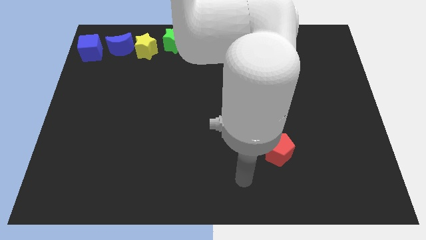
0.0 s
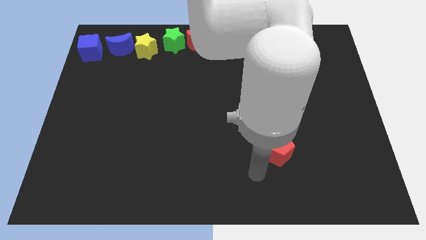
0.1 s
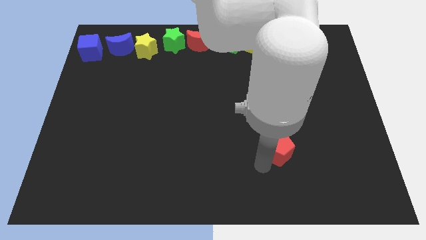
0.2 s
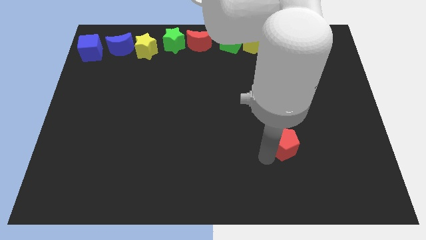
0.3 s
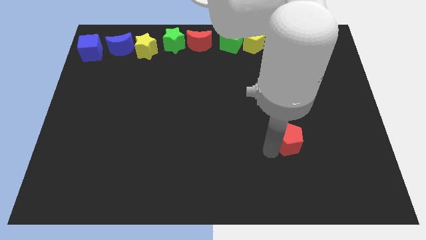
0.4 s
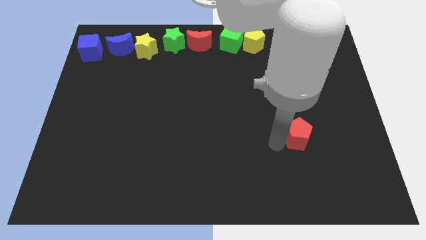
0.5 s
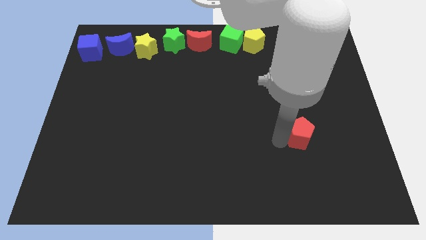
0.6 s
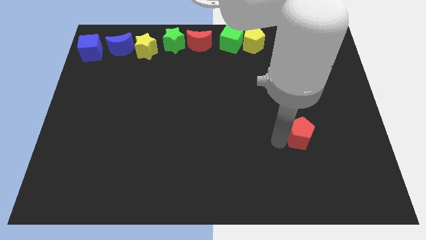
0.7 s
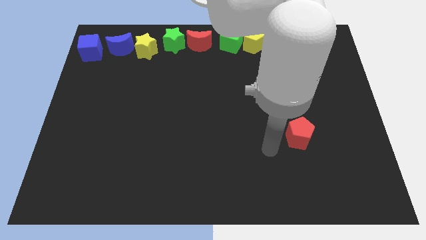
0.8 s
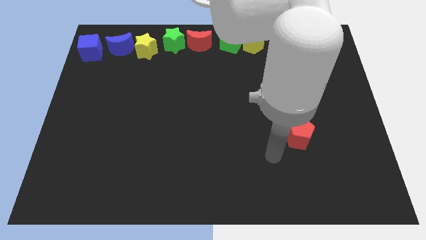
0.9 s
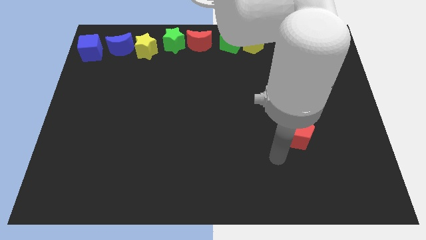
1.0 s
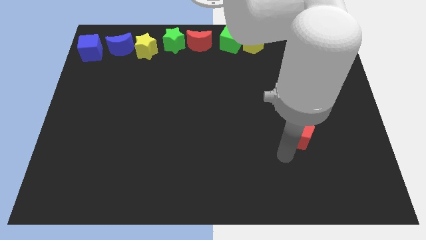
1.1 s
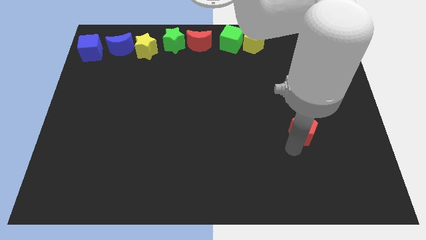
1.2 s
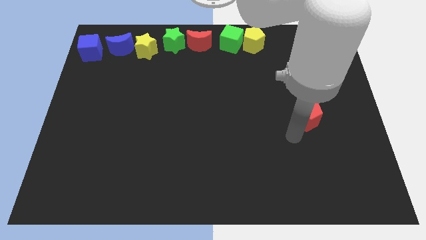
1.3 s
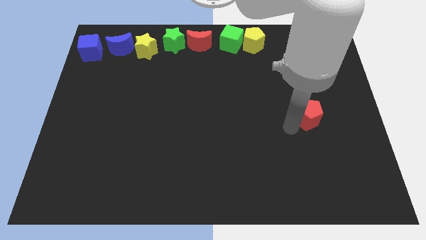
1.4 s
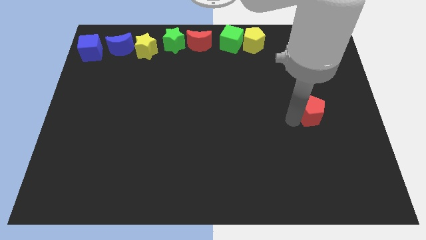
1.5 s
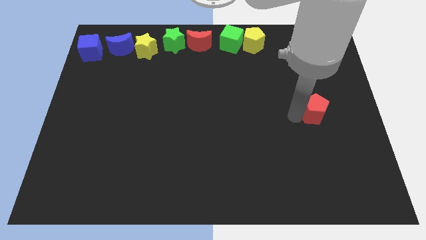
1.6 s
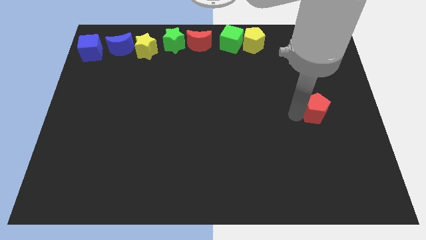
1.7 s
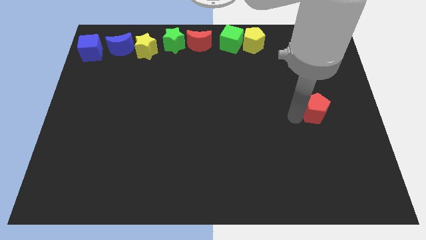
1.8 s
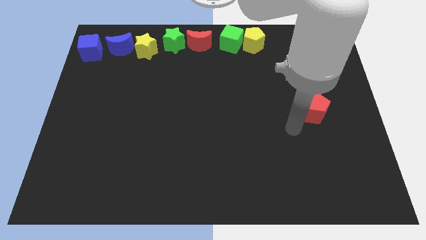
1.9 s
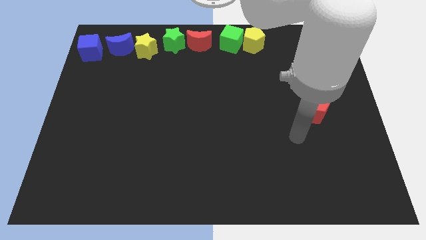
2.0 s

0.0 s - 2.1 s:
push the red pentagon slightly to the top right of the board

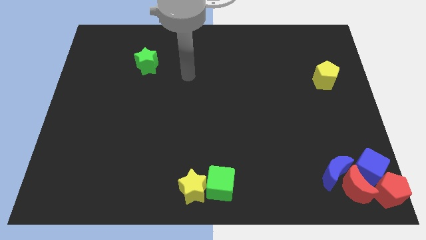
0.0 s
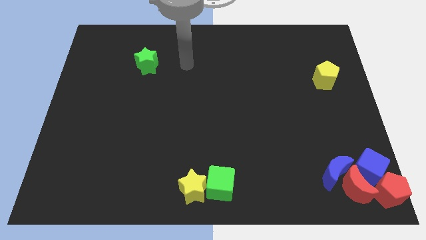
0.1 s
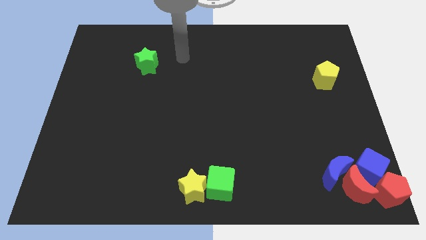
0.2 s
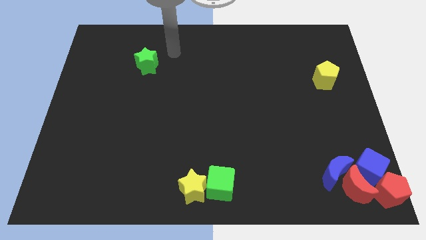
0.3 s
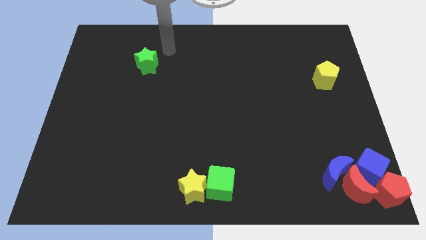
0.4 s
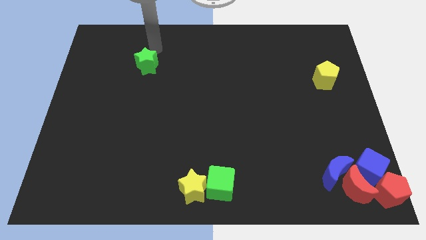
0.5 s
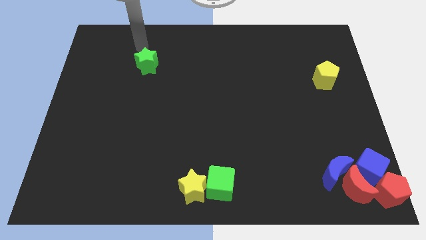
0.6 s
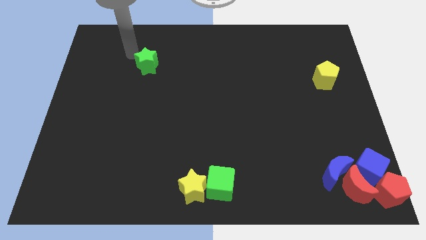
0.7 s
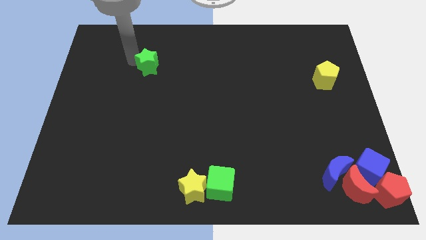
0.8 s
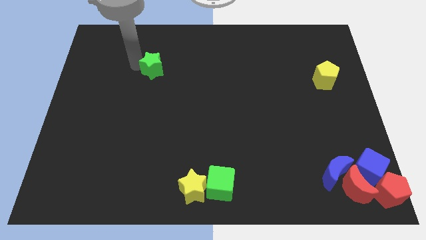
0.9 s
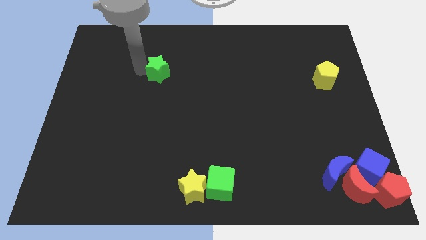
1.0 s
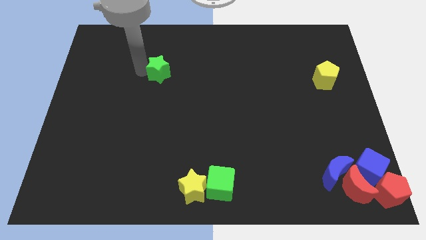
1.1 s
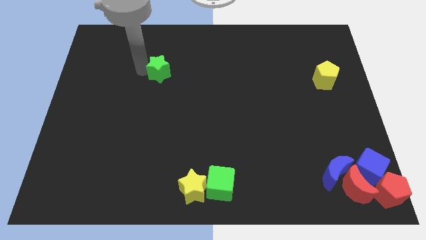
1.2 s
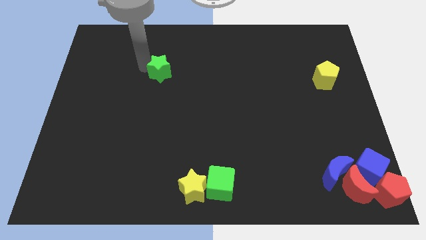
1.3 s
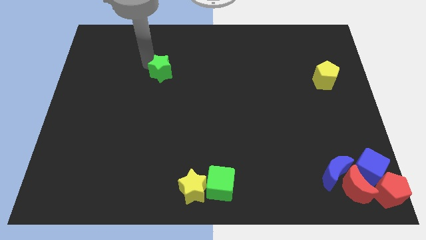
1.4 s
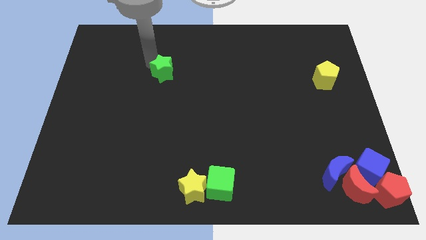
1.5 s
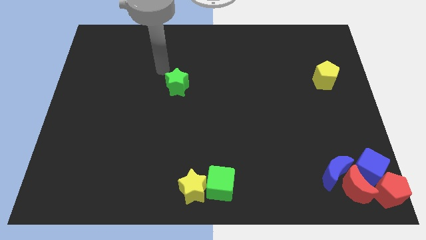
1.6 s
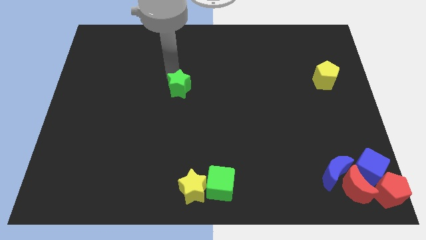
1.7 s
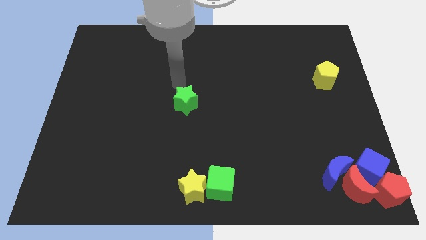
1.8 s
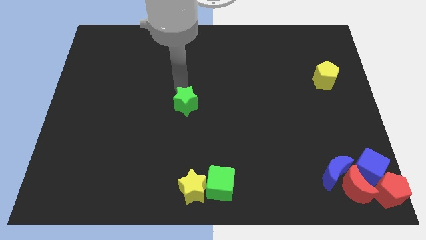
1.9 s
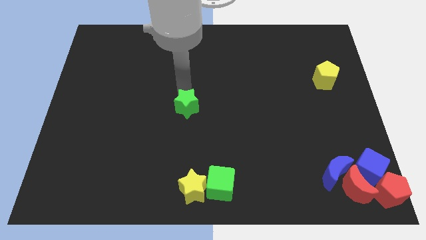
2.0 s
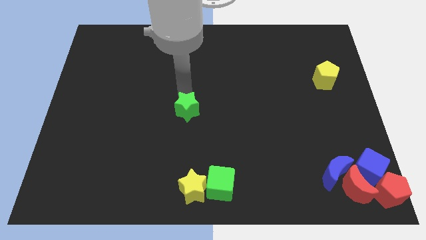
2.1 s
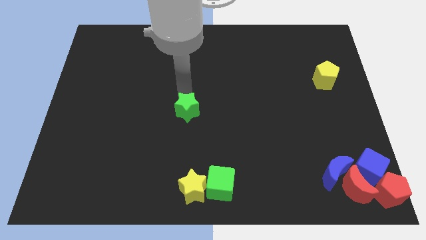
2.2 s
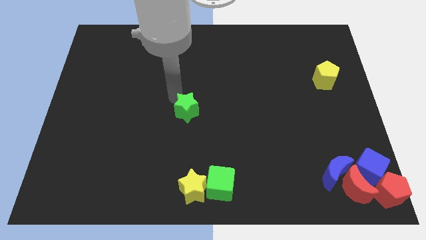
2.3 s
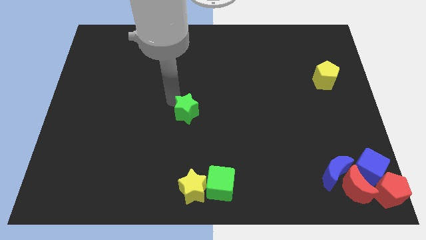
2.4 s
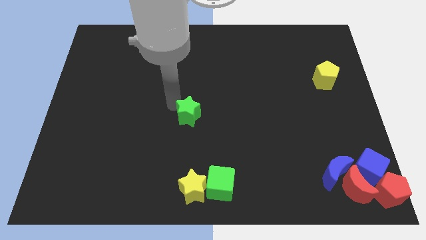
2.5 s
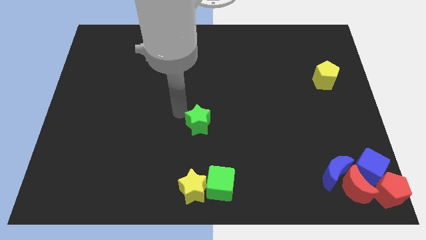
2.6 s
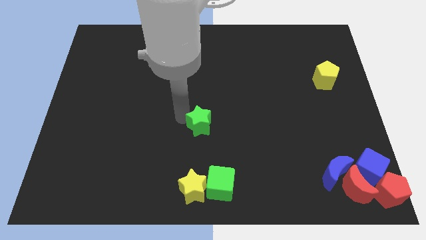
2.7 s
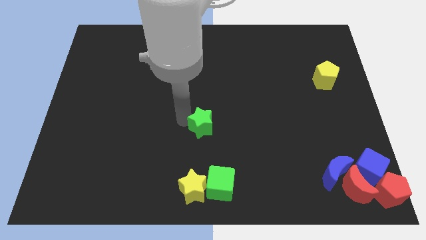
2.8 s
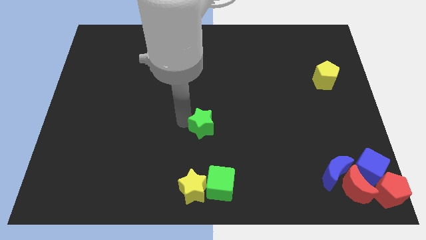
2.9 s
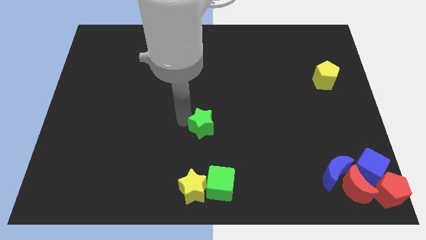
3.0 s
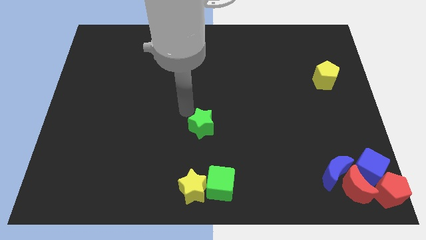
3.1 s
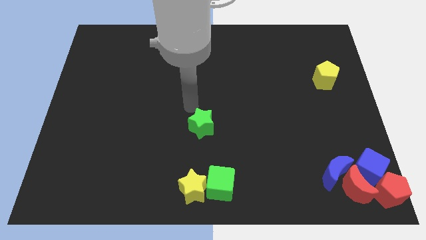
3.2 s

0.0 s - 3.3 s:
move the green star vertically at the top side of the yellow star

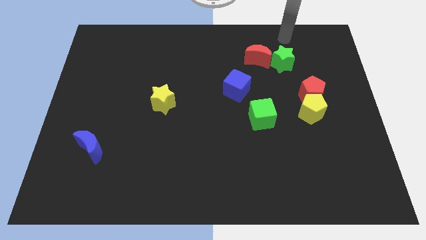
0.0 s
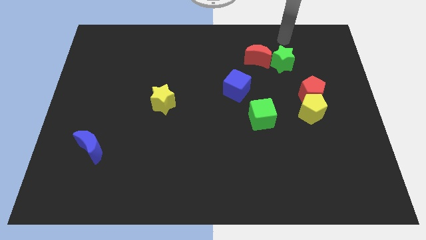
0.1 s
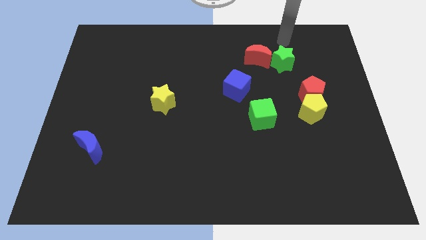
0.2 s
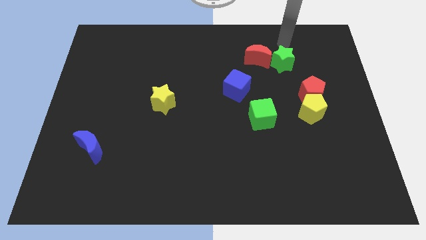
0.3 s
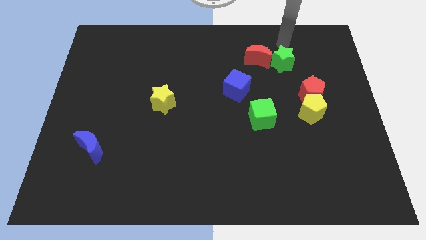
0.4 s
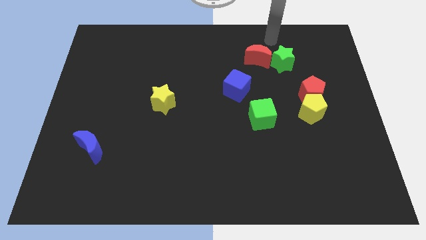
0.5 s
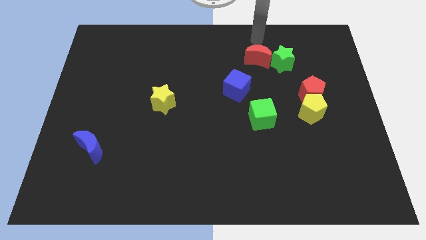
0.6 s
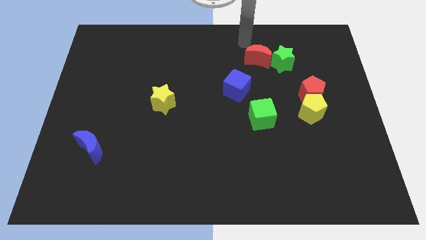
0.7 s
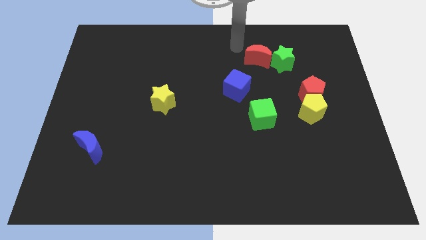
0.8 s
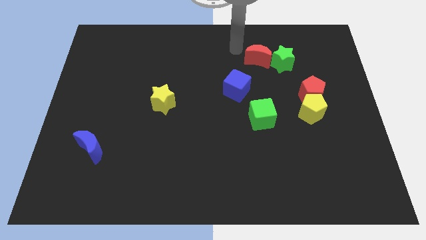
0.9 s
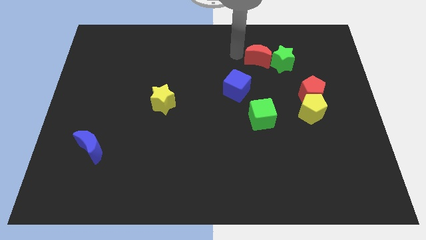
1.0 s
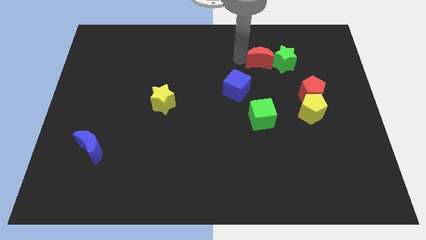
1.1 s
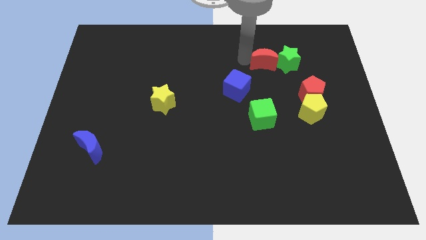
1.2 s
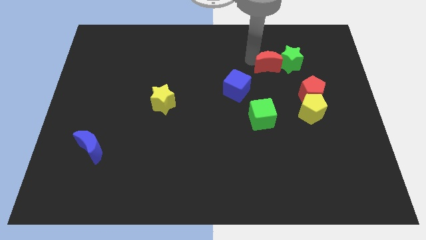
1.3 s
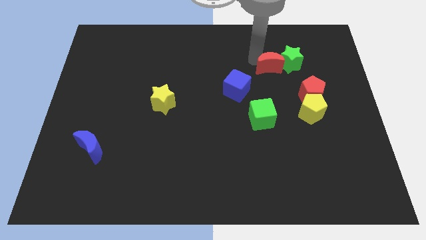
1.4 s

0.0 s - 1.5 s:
push the red moon into the green star

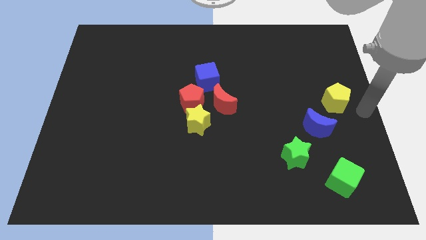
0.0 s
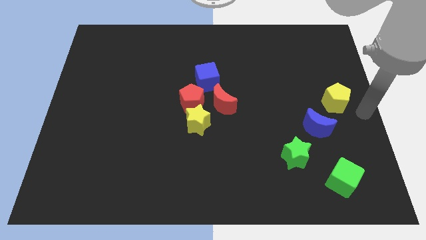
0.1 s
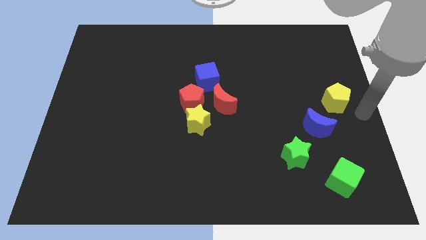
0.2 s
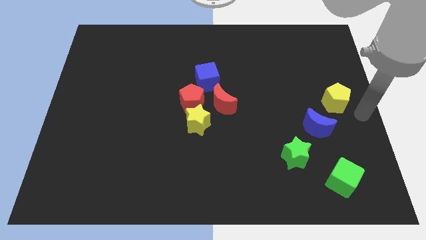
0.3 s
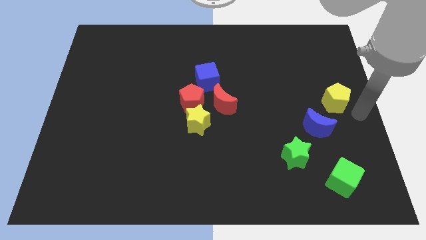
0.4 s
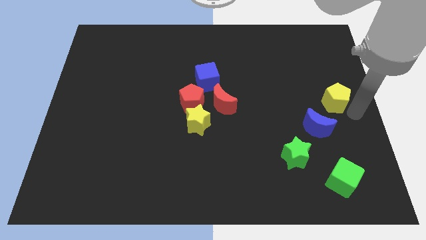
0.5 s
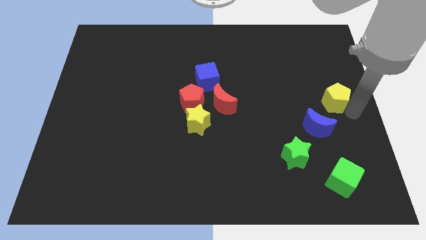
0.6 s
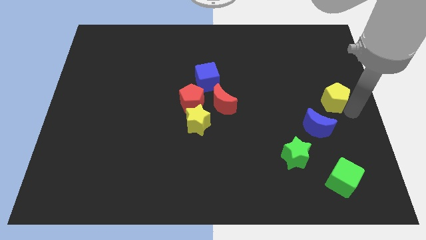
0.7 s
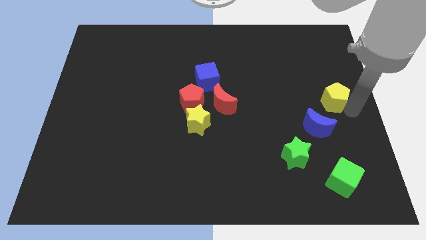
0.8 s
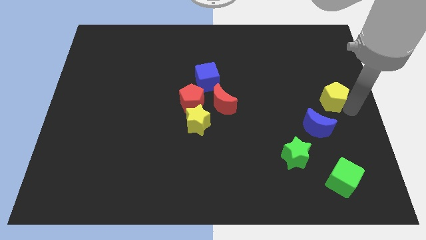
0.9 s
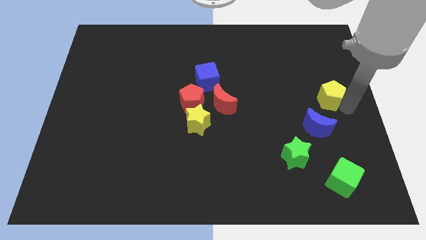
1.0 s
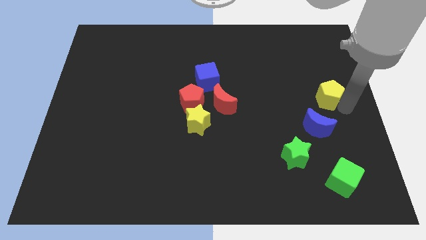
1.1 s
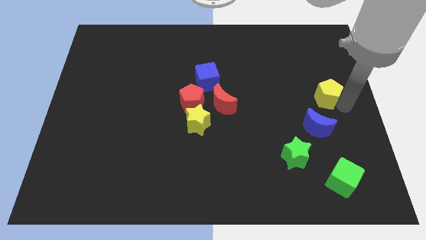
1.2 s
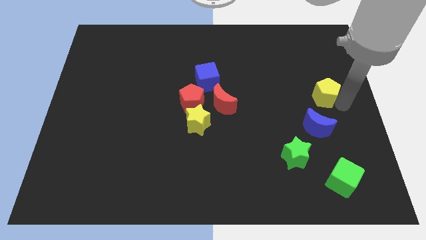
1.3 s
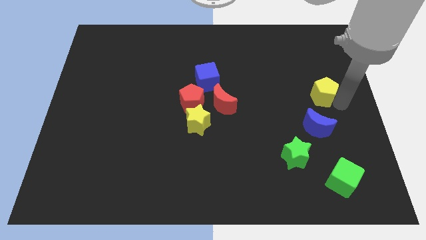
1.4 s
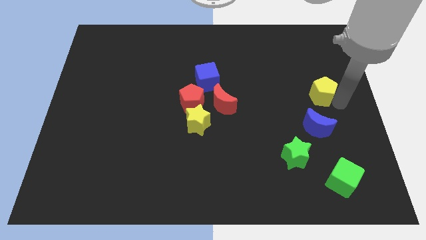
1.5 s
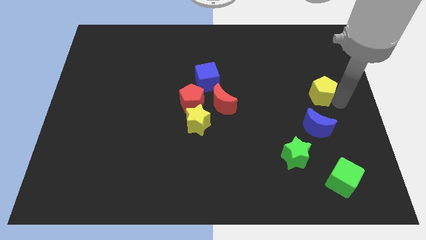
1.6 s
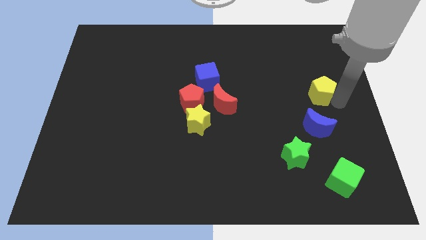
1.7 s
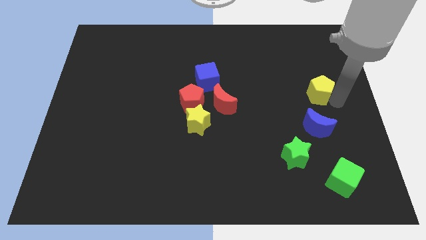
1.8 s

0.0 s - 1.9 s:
push the yellow pentagon slightly to the left
